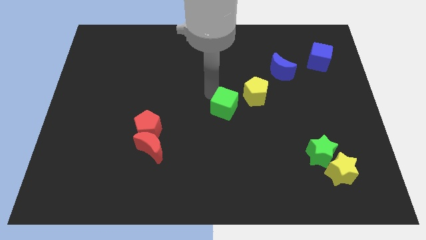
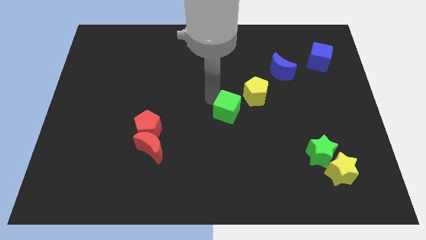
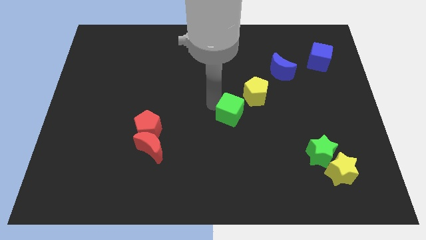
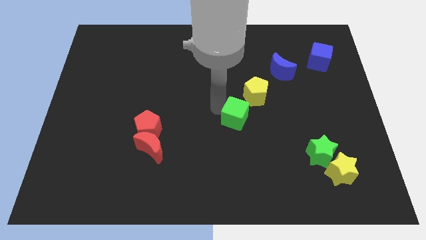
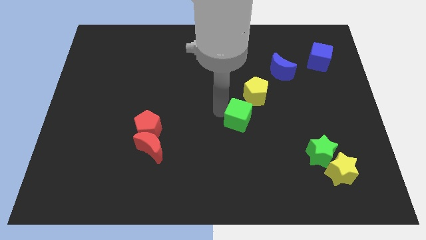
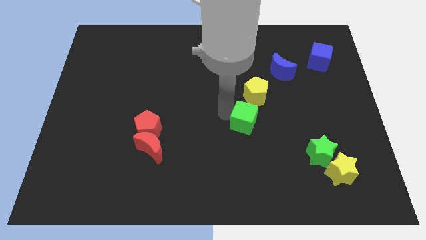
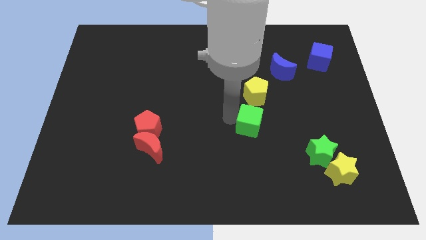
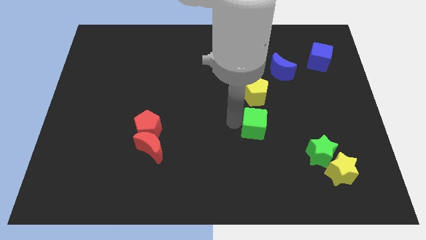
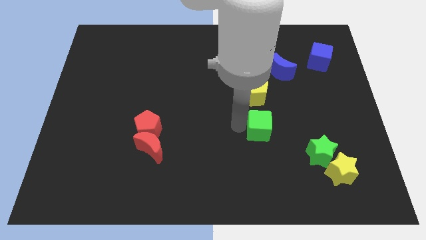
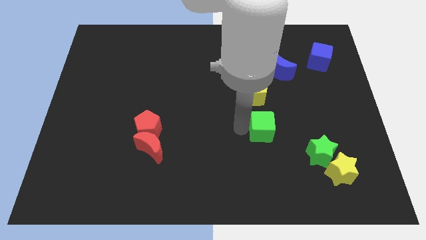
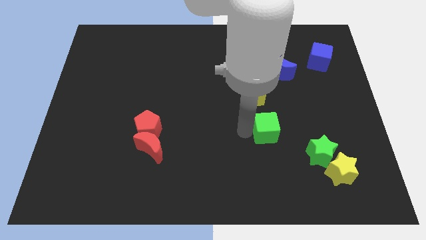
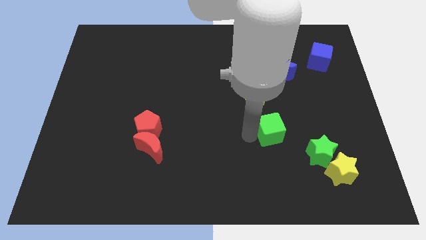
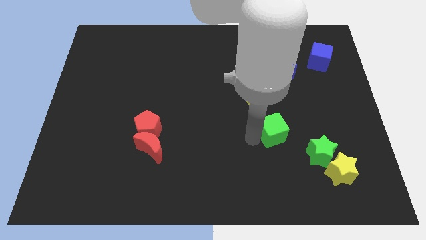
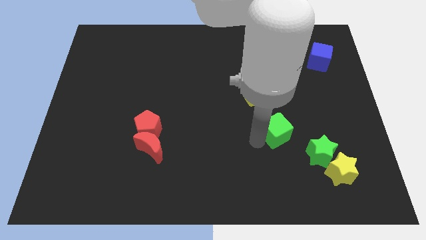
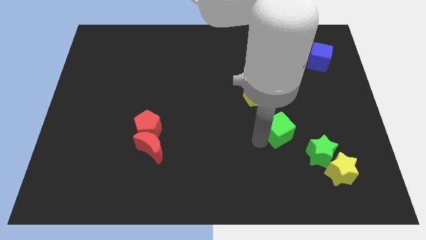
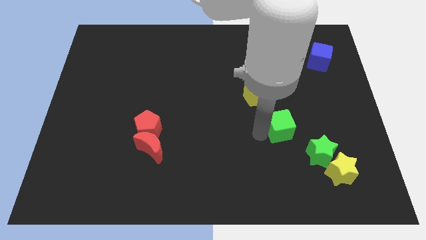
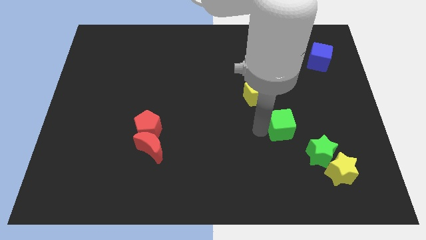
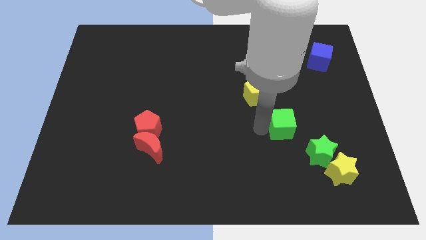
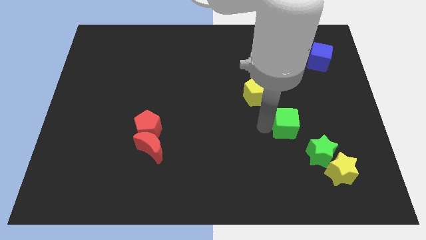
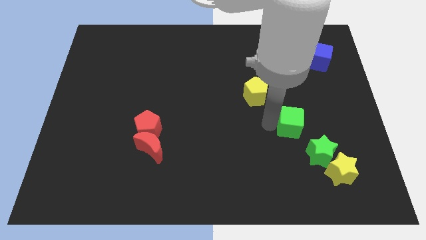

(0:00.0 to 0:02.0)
place the green cube in between yellow pentagon and green star

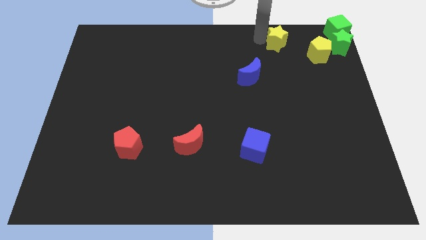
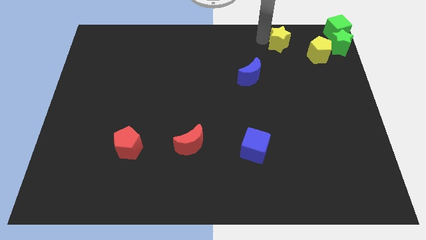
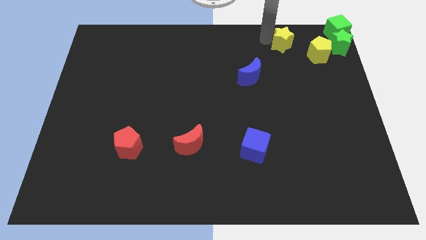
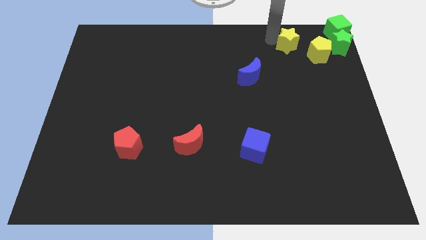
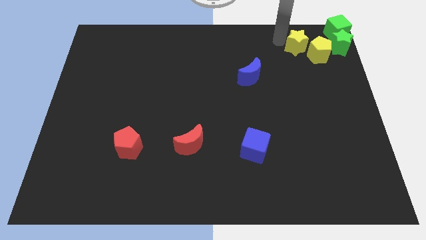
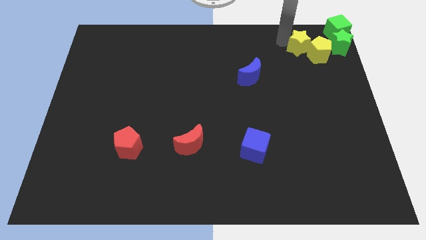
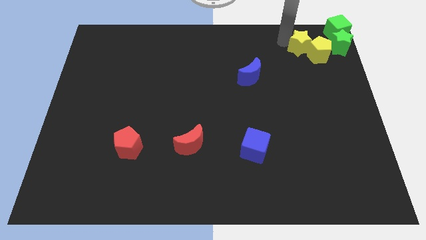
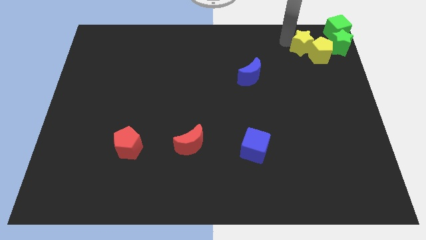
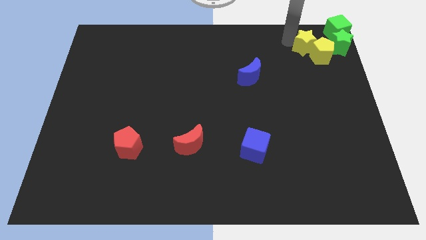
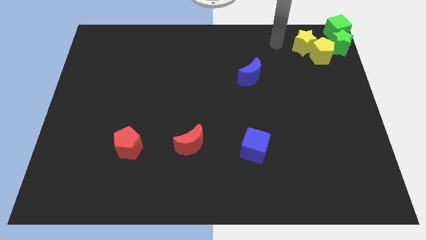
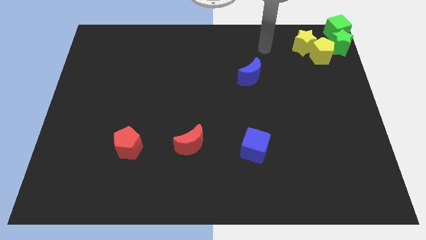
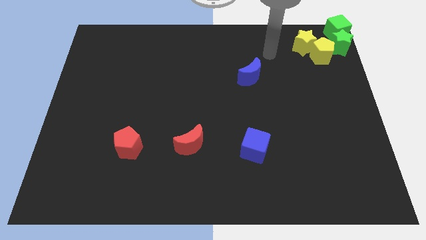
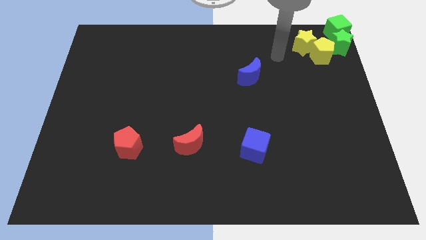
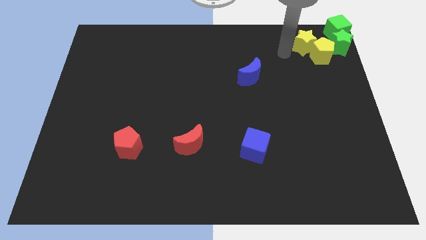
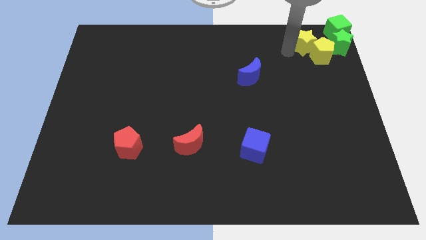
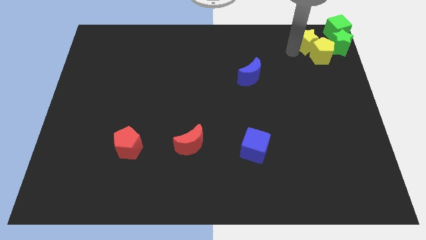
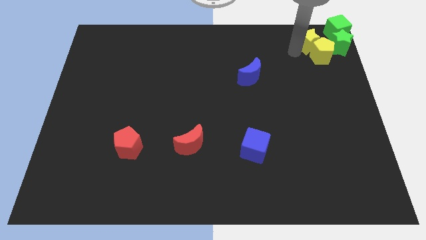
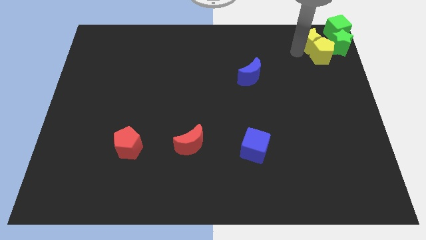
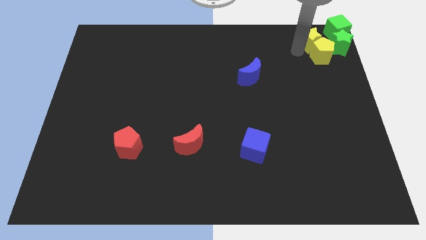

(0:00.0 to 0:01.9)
push yellow star into the yellow pentagon

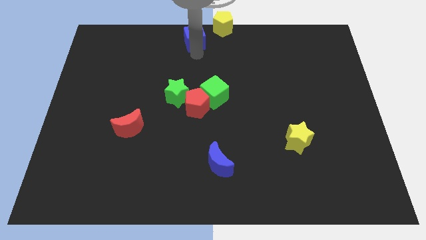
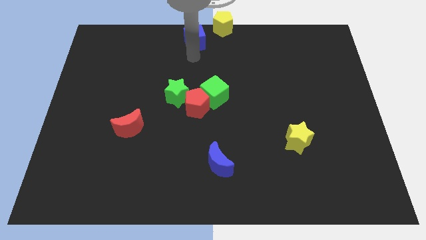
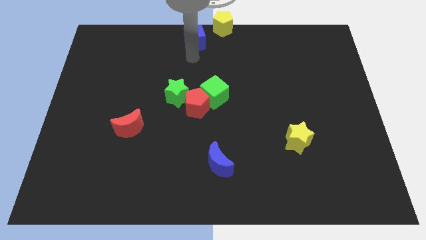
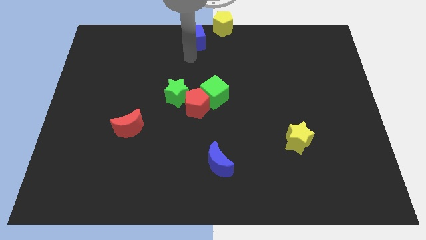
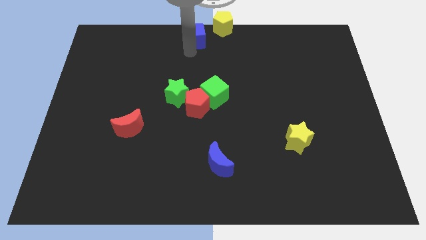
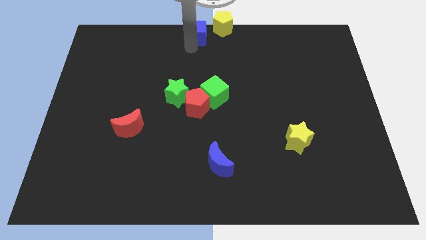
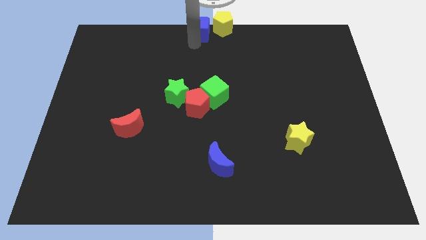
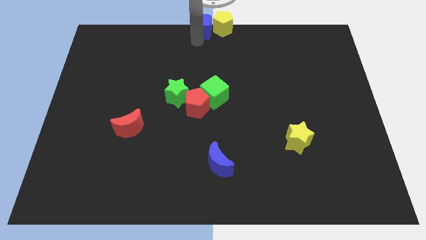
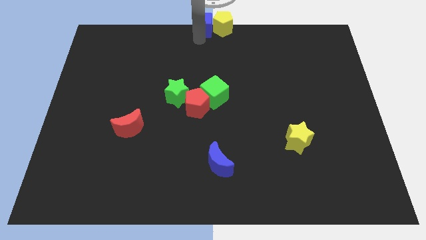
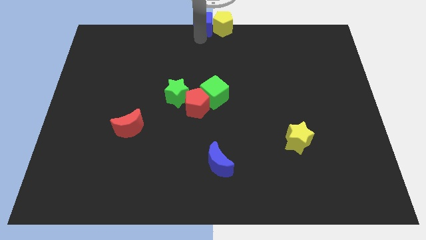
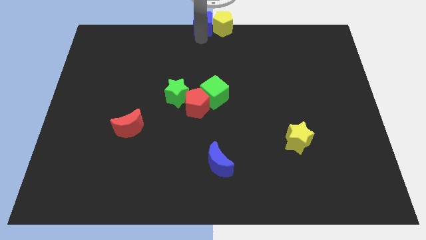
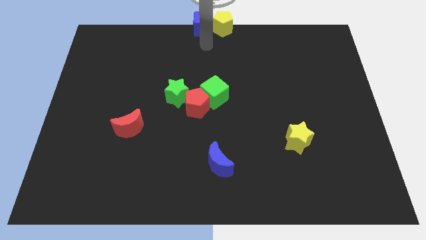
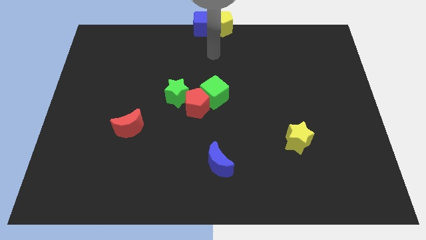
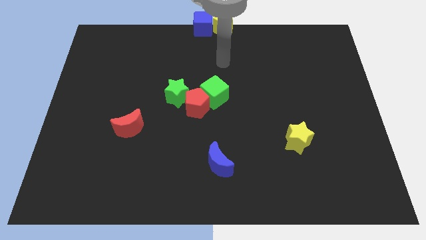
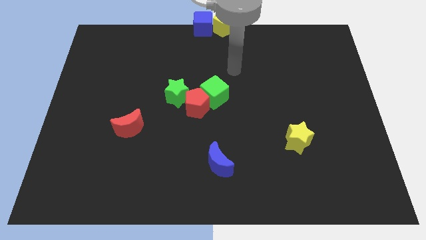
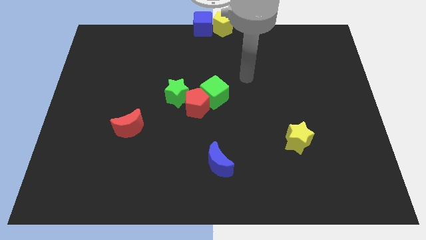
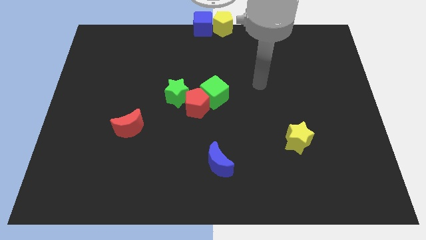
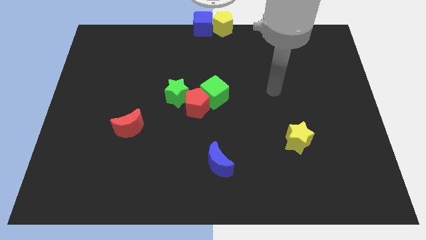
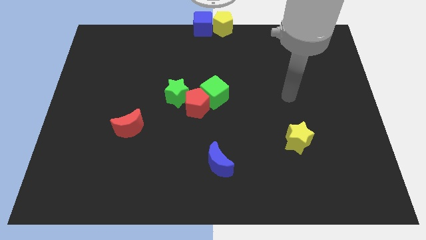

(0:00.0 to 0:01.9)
move the blue cube to the left of the yellow pentagon

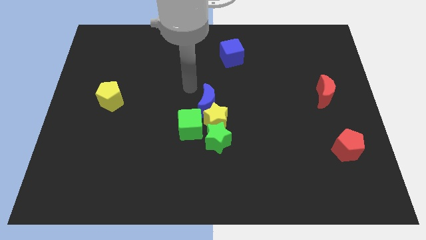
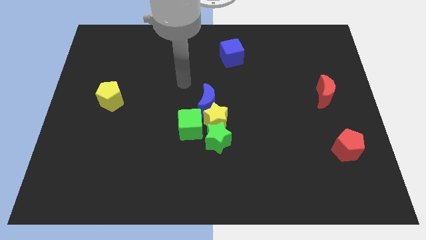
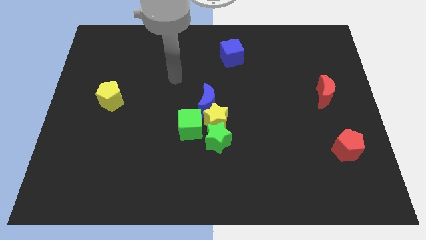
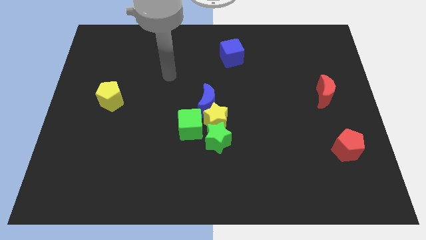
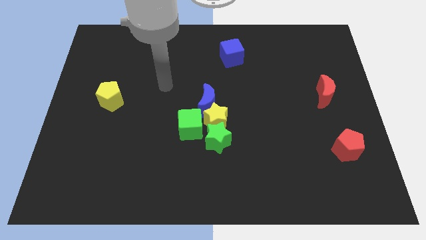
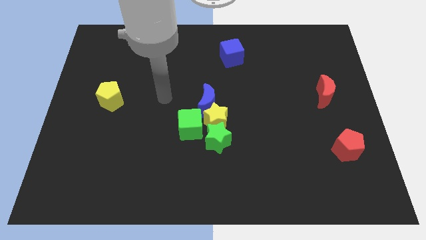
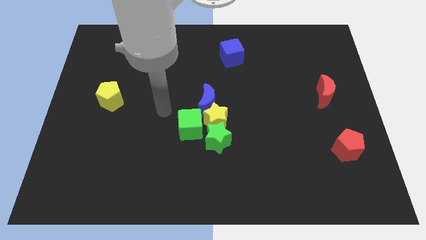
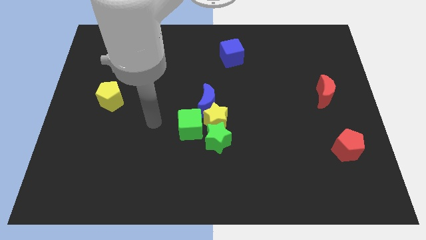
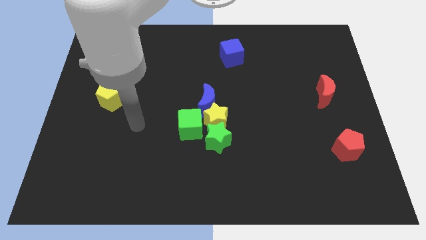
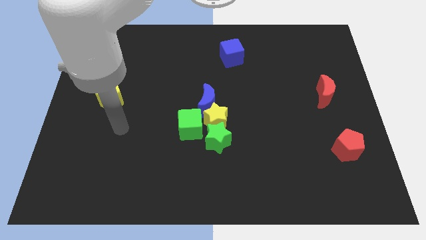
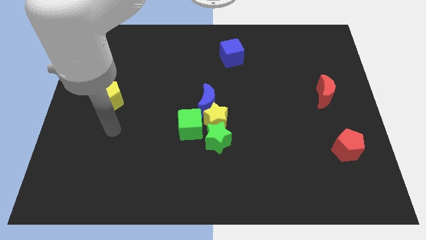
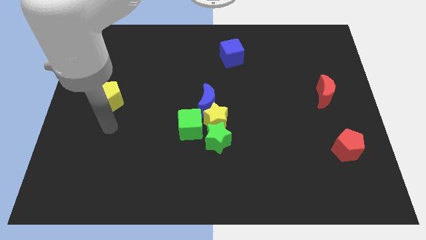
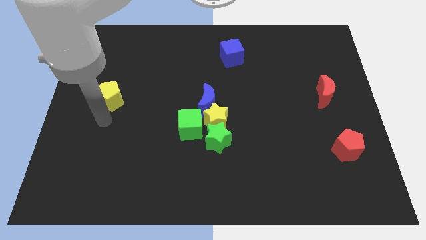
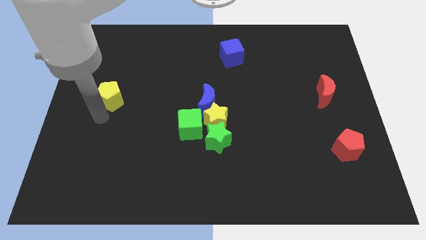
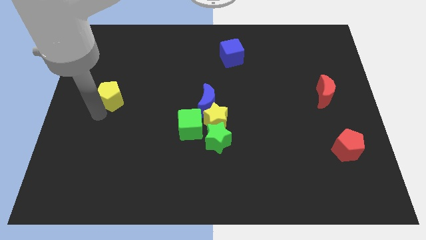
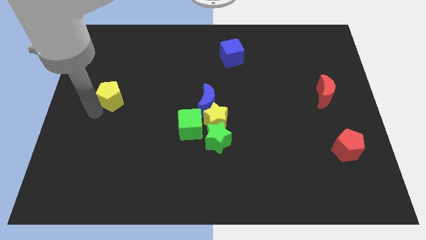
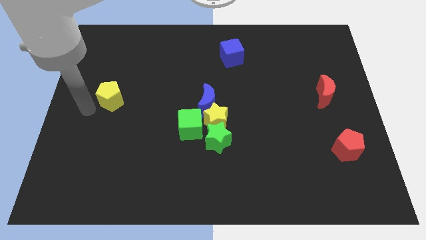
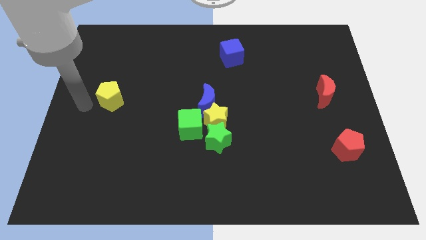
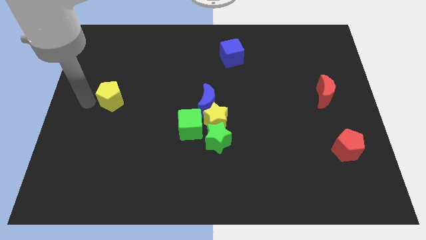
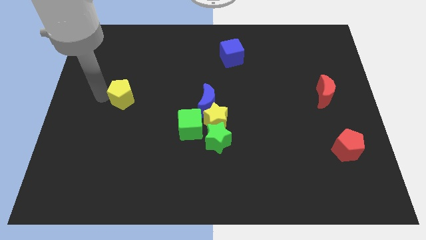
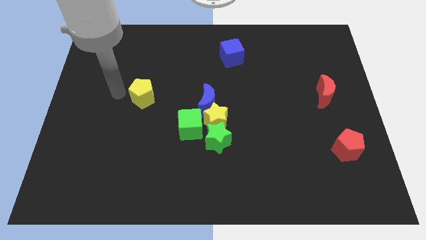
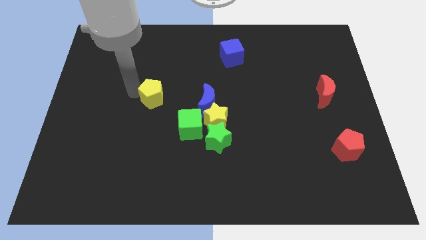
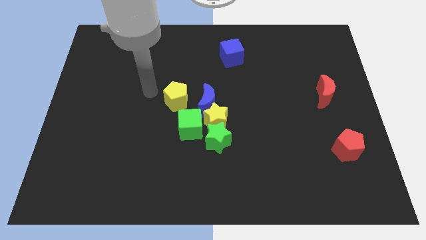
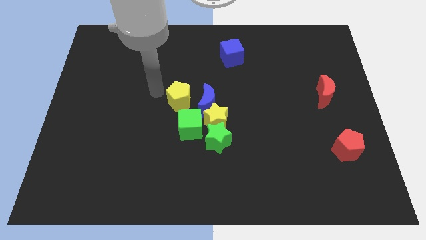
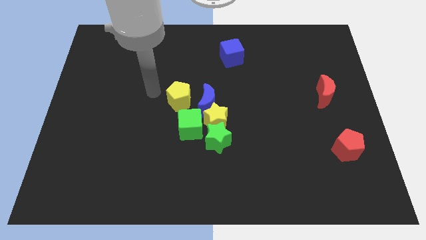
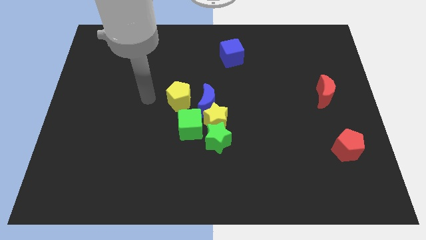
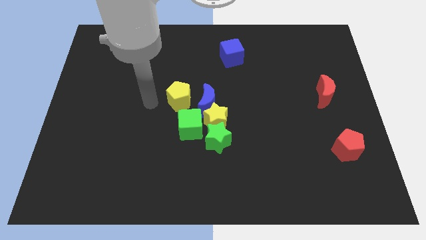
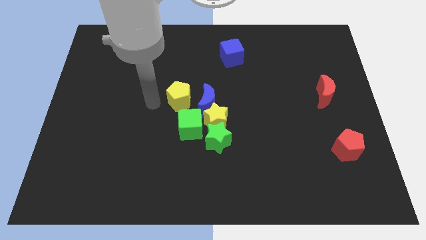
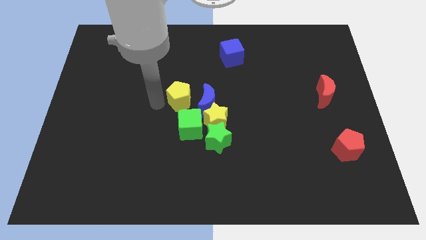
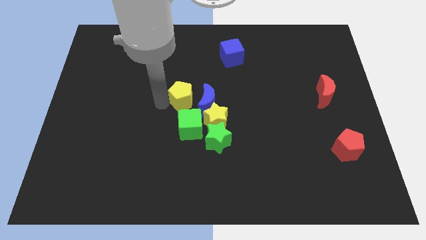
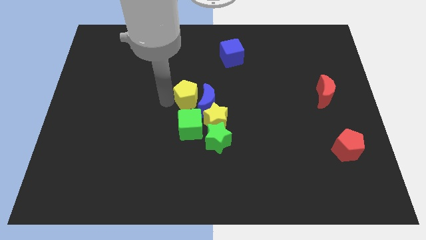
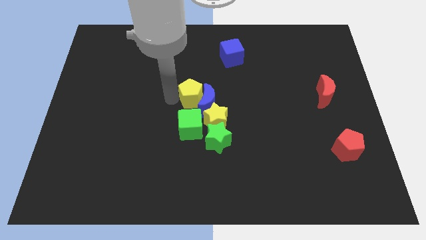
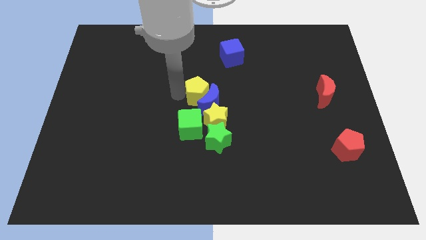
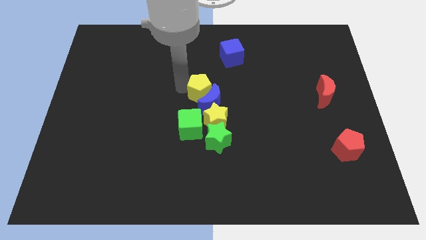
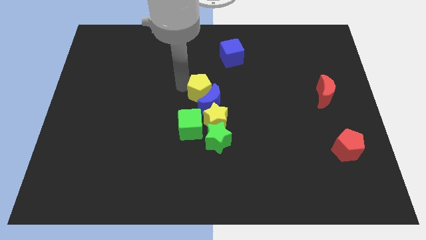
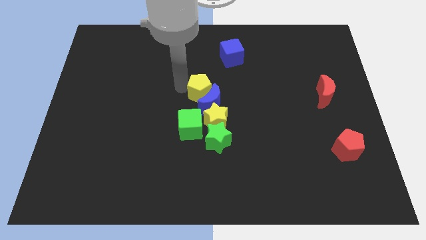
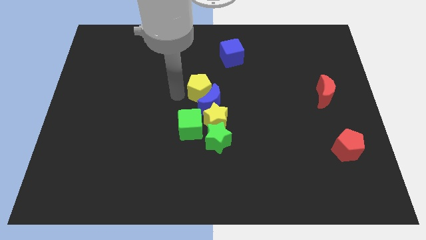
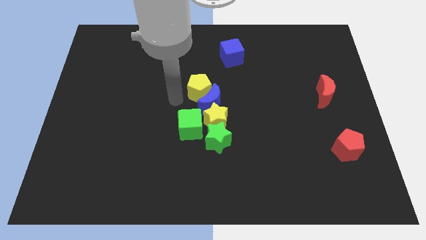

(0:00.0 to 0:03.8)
push the yellow pentagon above the blue crescent
